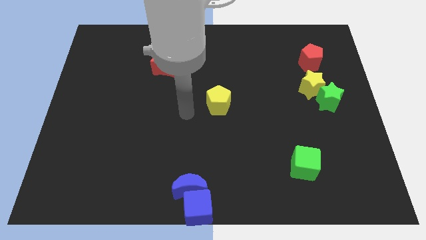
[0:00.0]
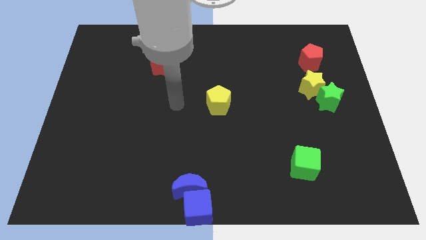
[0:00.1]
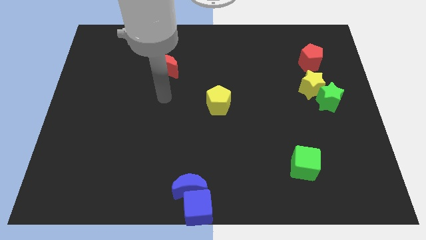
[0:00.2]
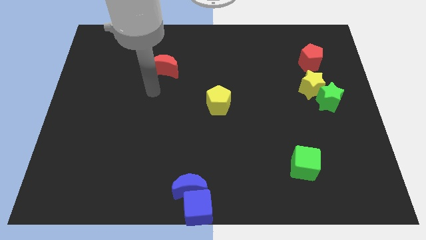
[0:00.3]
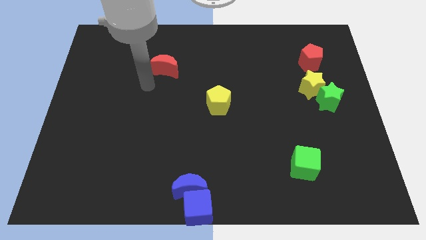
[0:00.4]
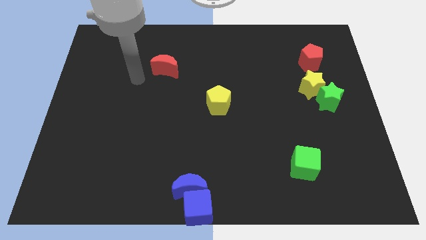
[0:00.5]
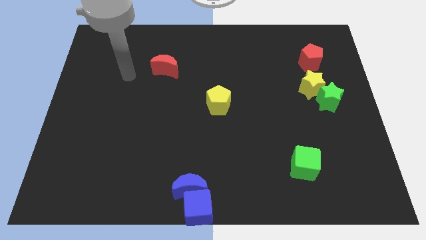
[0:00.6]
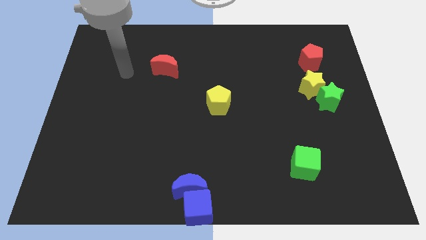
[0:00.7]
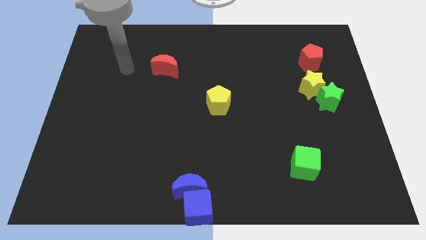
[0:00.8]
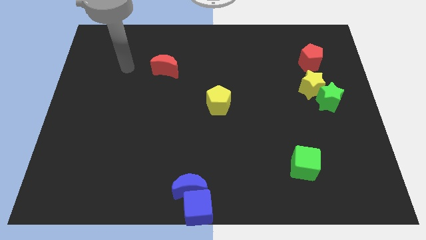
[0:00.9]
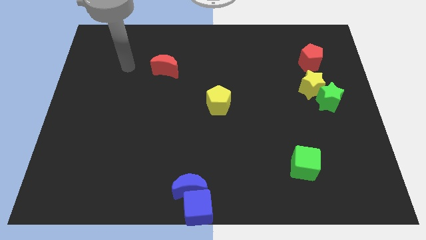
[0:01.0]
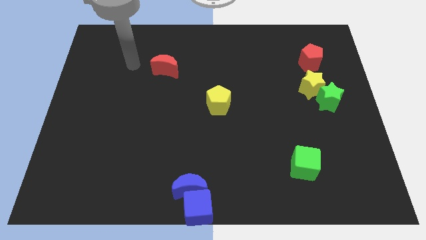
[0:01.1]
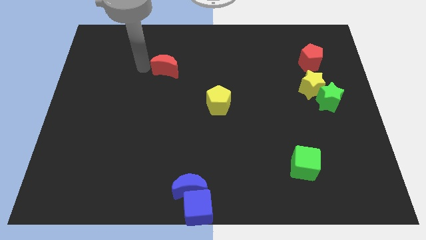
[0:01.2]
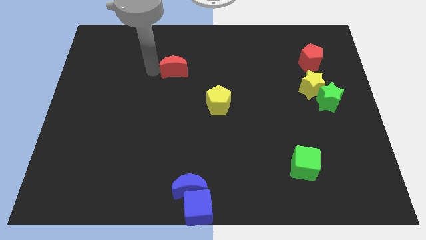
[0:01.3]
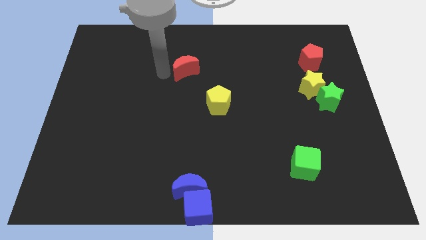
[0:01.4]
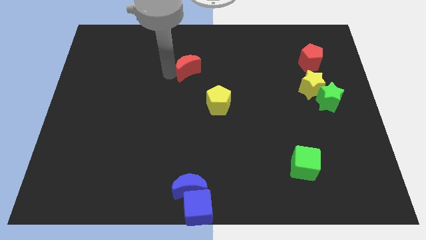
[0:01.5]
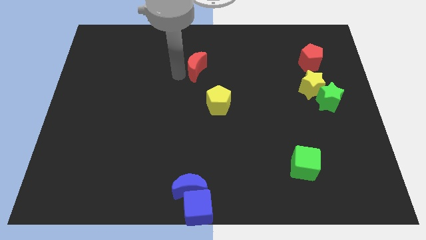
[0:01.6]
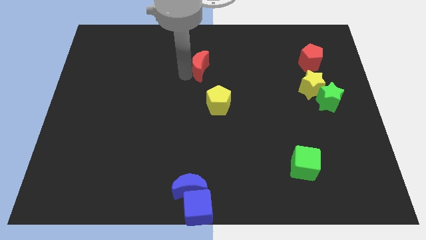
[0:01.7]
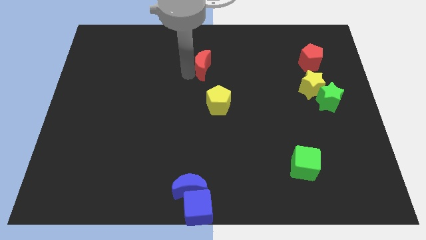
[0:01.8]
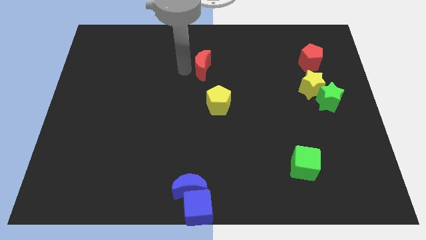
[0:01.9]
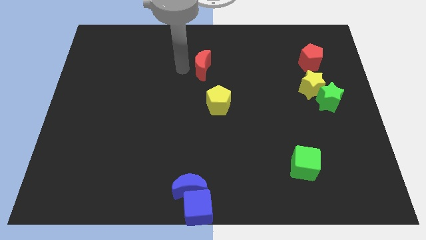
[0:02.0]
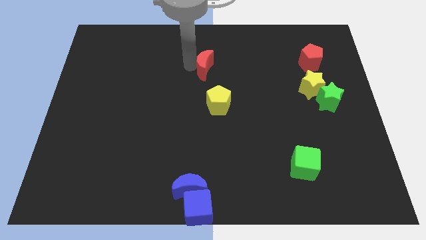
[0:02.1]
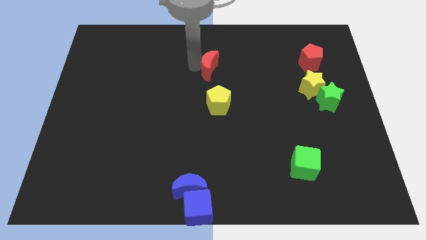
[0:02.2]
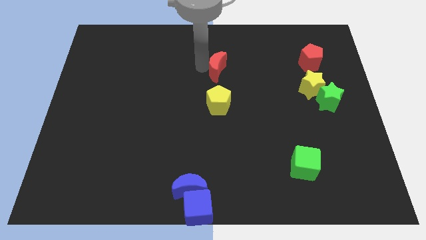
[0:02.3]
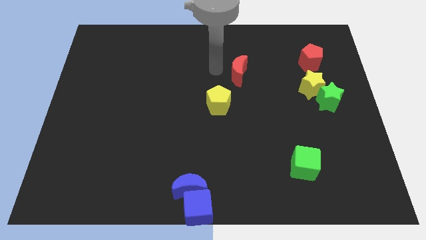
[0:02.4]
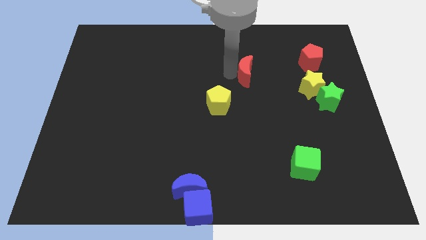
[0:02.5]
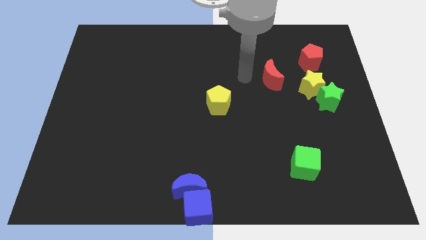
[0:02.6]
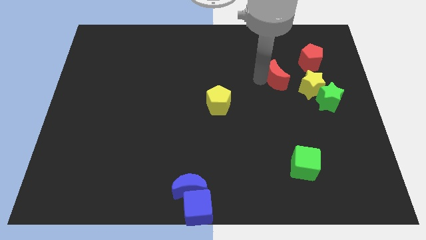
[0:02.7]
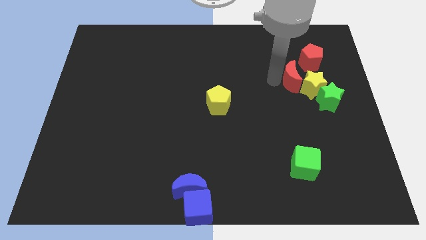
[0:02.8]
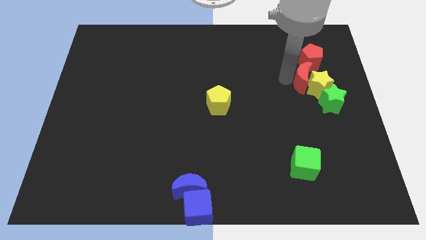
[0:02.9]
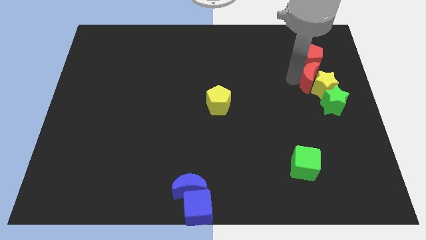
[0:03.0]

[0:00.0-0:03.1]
slide red moon into yellow star

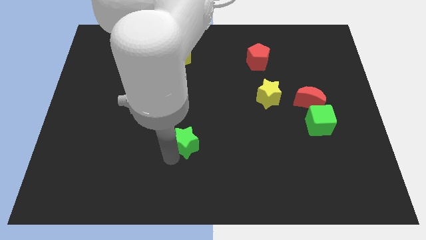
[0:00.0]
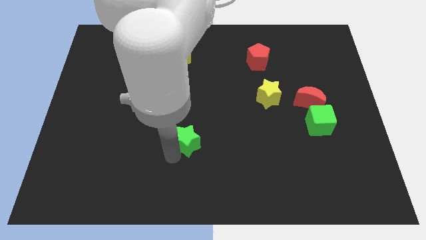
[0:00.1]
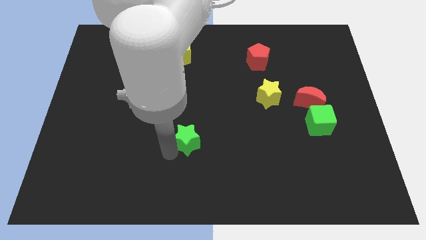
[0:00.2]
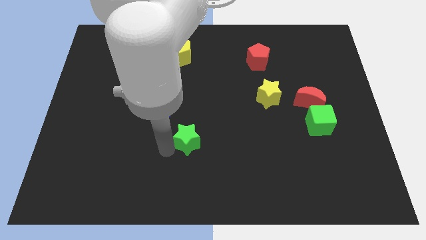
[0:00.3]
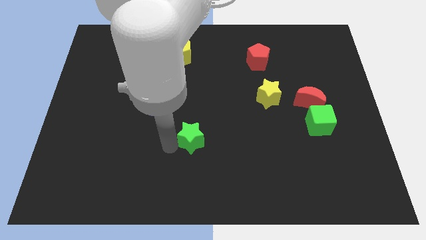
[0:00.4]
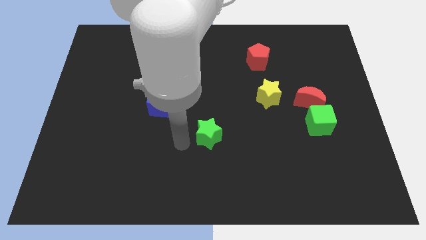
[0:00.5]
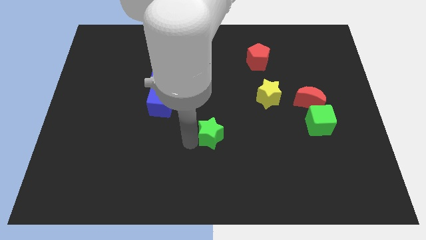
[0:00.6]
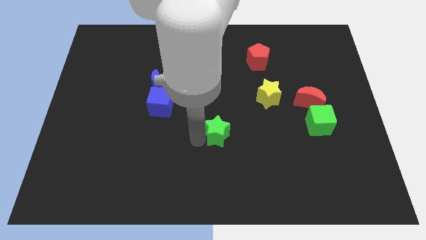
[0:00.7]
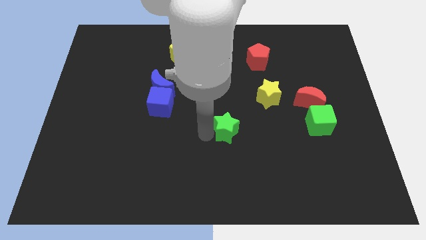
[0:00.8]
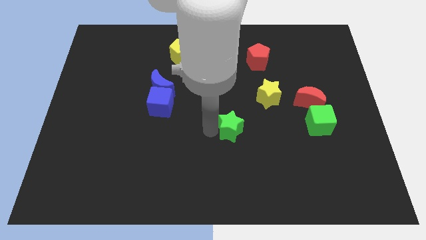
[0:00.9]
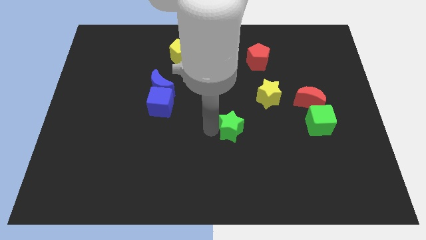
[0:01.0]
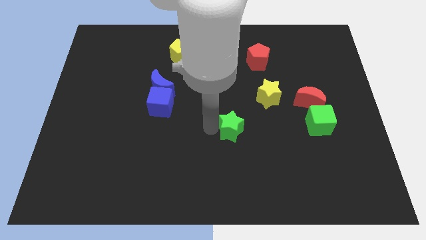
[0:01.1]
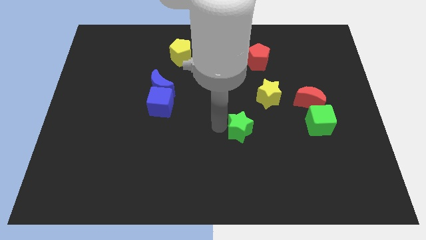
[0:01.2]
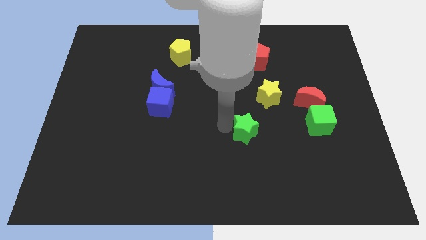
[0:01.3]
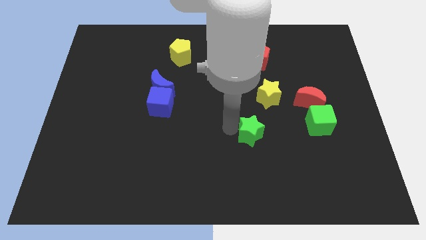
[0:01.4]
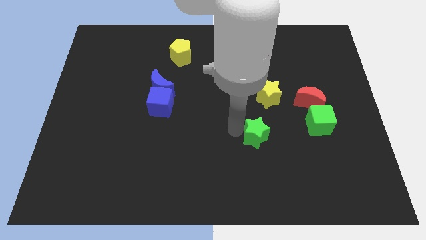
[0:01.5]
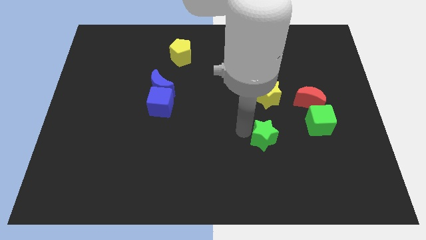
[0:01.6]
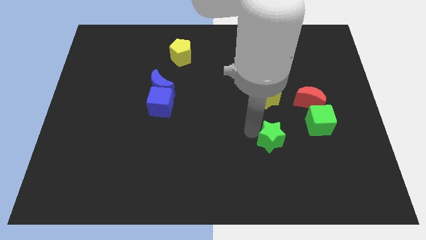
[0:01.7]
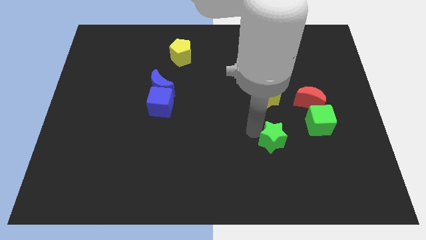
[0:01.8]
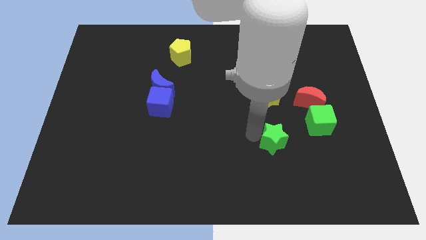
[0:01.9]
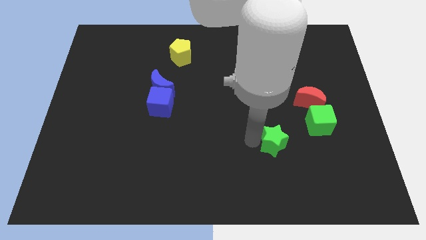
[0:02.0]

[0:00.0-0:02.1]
push the green star towards the green cube

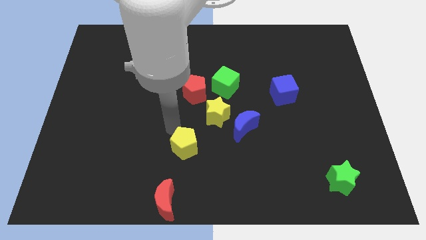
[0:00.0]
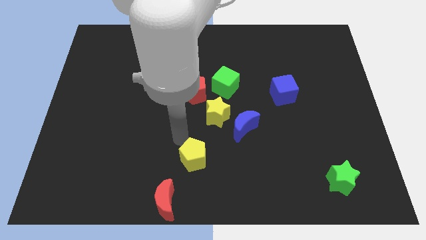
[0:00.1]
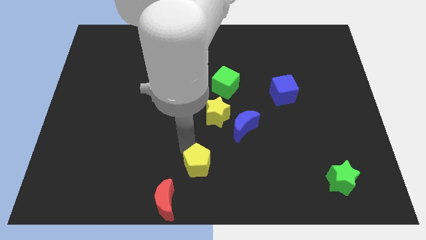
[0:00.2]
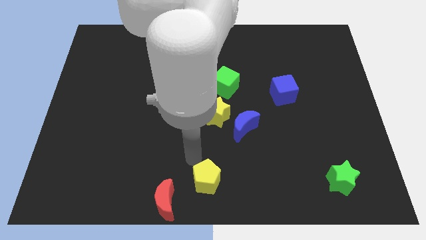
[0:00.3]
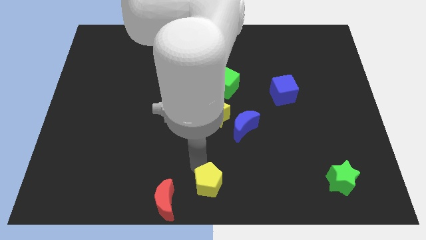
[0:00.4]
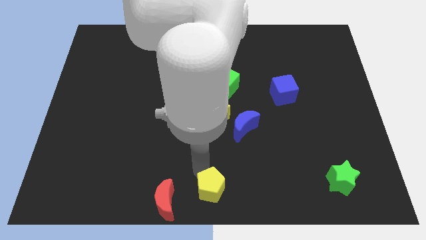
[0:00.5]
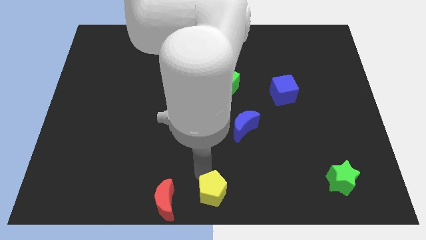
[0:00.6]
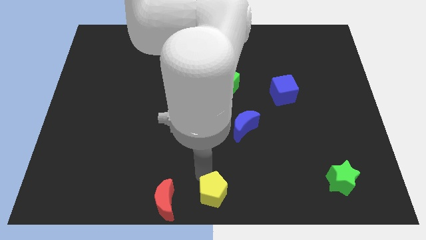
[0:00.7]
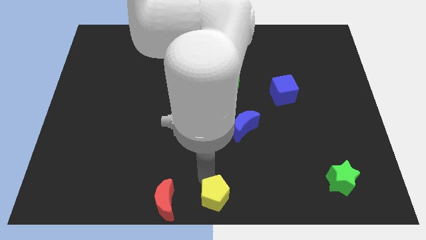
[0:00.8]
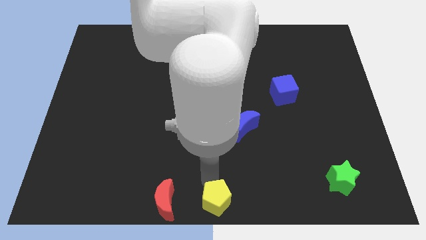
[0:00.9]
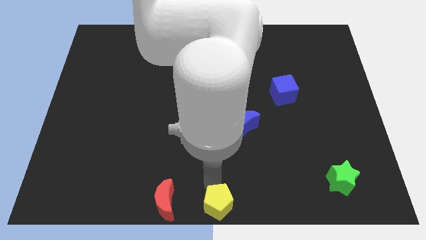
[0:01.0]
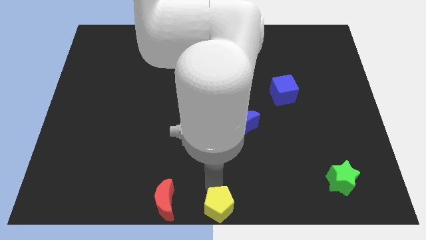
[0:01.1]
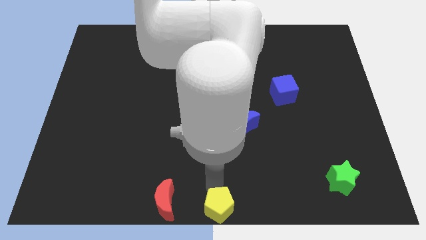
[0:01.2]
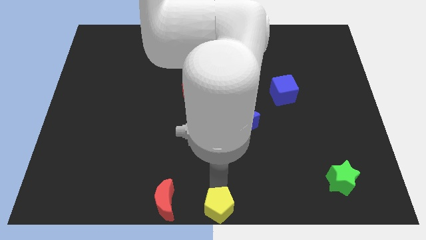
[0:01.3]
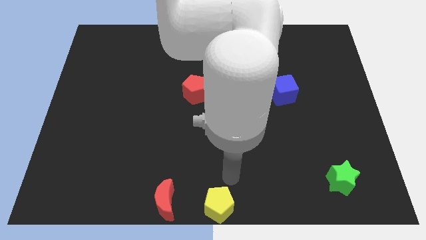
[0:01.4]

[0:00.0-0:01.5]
push the yellow pentagon on the right side of red moon

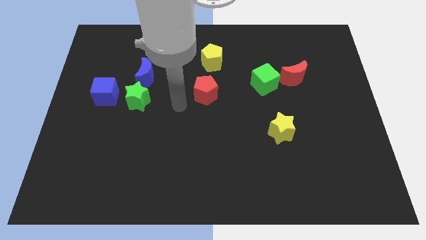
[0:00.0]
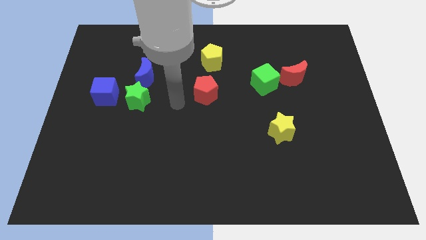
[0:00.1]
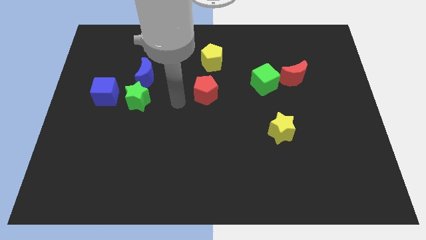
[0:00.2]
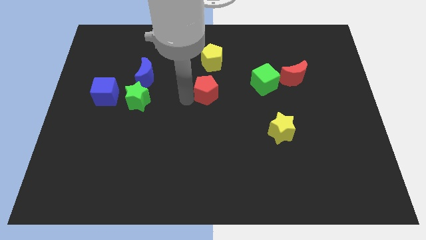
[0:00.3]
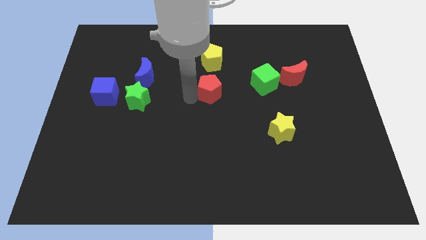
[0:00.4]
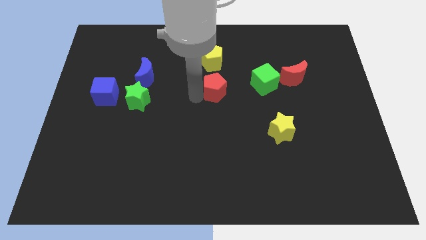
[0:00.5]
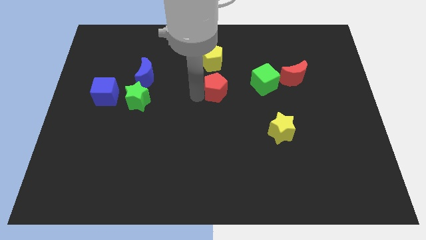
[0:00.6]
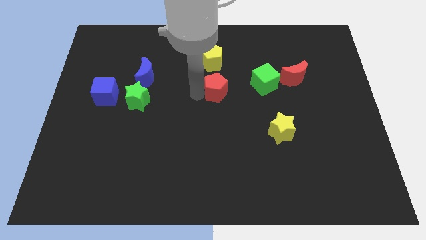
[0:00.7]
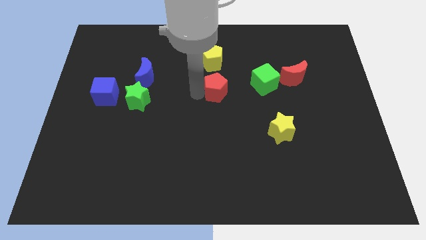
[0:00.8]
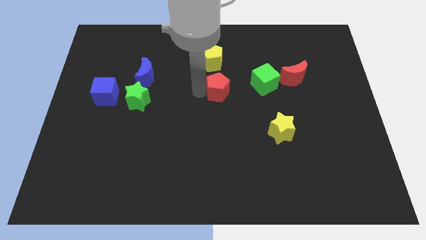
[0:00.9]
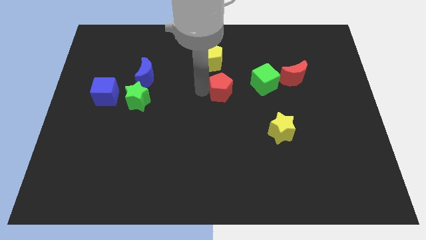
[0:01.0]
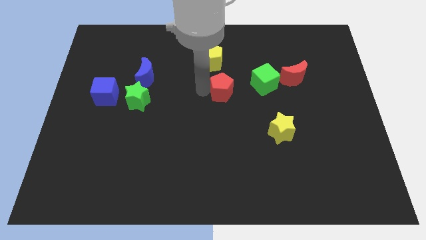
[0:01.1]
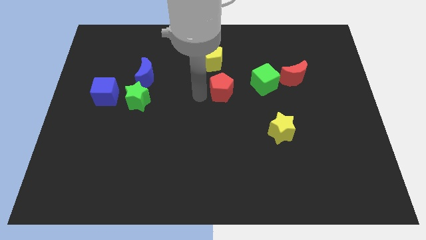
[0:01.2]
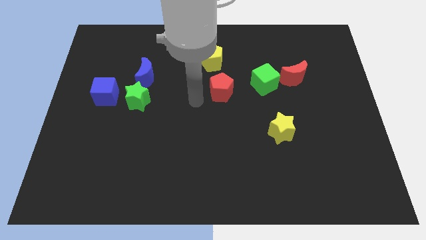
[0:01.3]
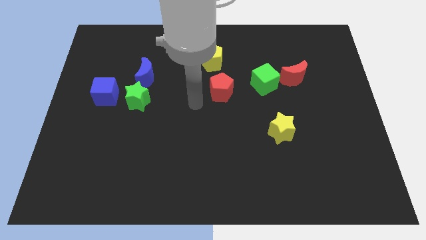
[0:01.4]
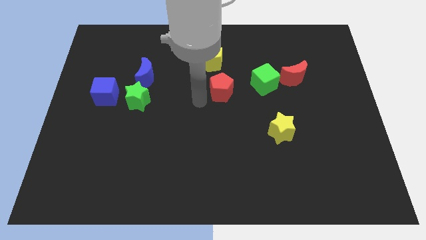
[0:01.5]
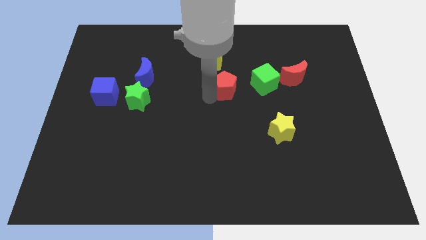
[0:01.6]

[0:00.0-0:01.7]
slightly push the red pentagon below to the yellow pentagon

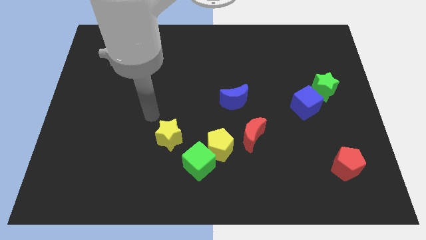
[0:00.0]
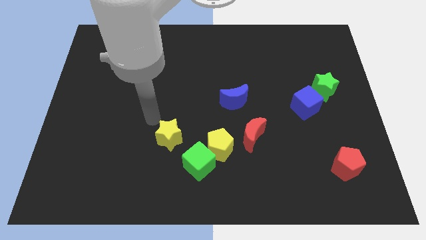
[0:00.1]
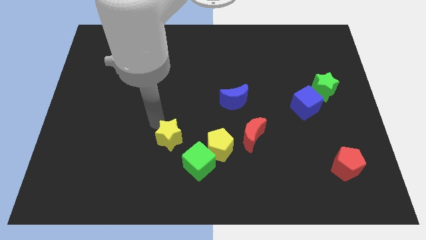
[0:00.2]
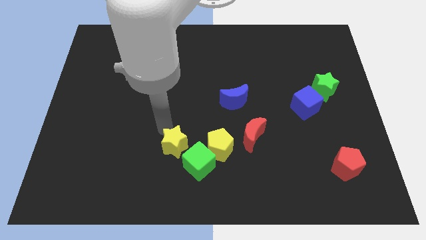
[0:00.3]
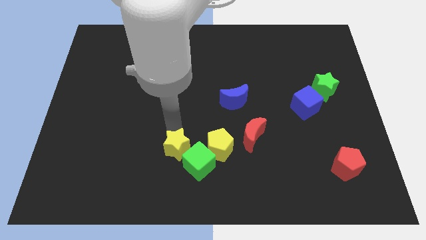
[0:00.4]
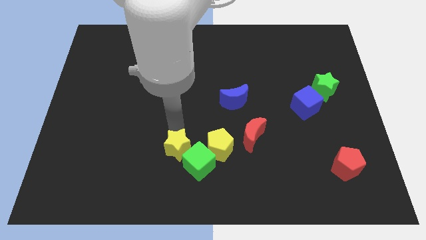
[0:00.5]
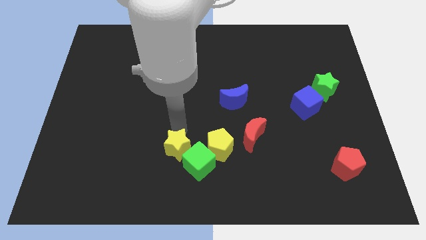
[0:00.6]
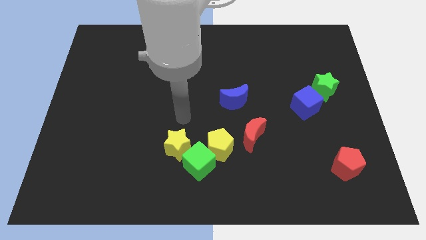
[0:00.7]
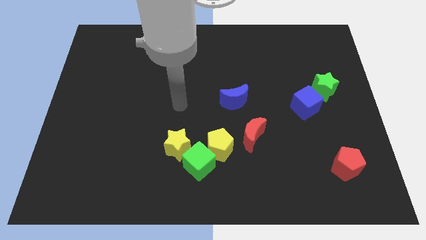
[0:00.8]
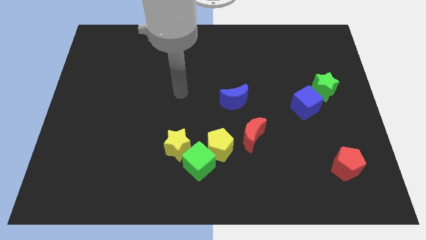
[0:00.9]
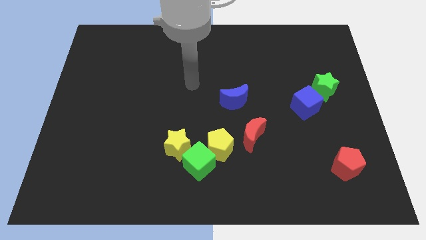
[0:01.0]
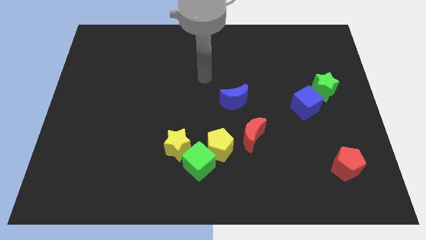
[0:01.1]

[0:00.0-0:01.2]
move the yellow star into the green cube
